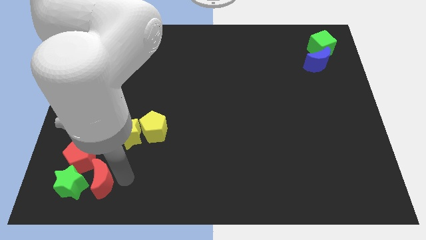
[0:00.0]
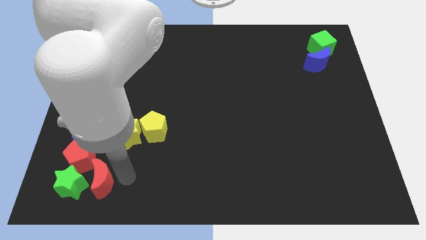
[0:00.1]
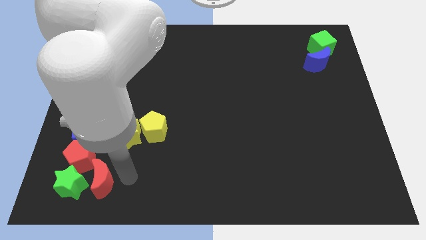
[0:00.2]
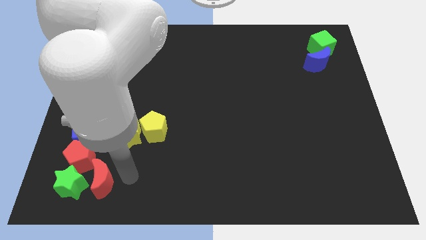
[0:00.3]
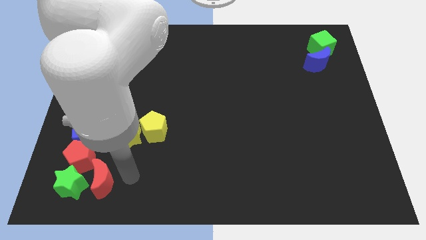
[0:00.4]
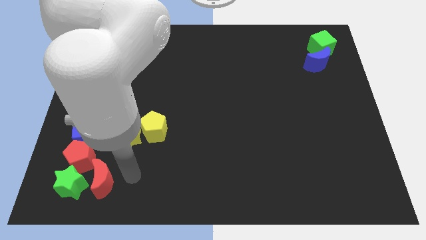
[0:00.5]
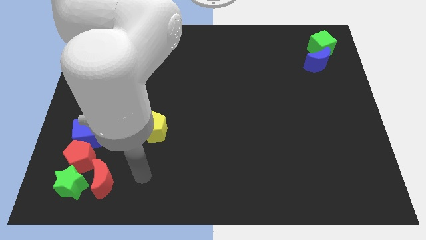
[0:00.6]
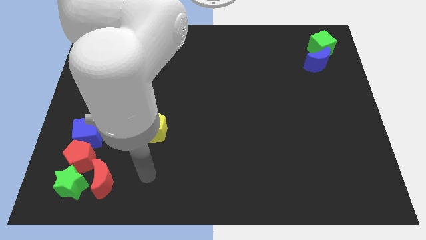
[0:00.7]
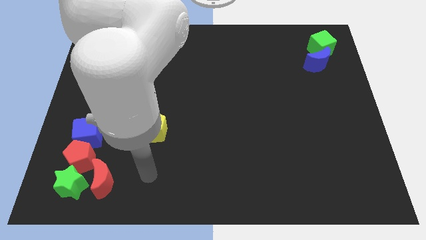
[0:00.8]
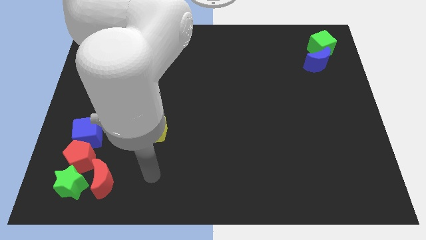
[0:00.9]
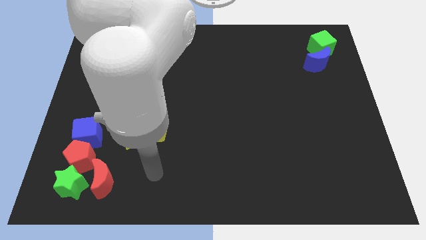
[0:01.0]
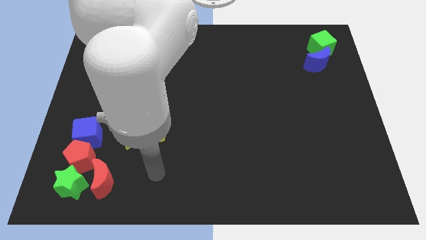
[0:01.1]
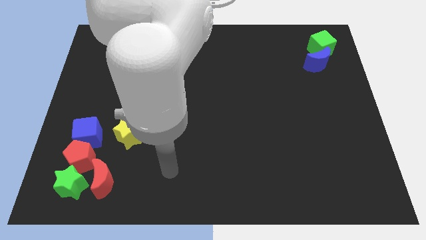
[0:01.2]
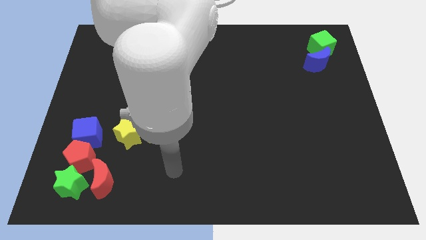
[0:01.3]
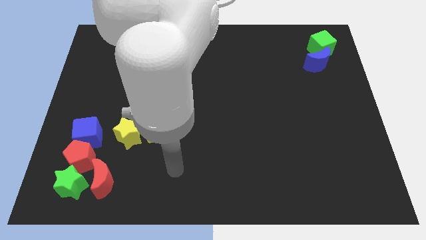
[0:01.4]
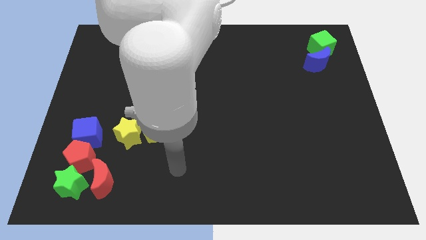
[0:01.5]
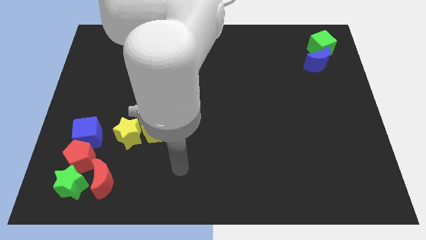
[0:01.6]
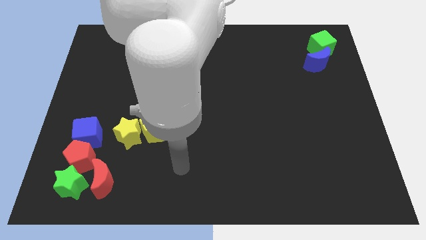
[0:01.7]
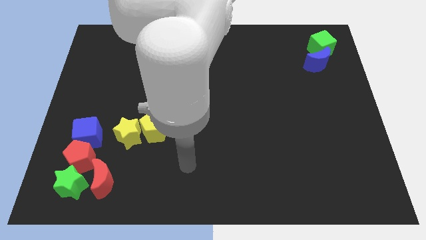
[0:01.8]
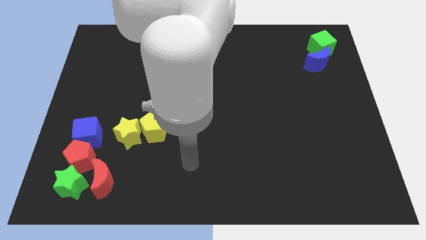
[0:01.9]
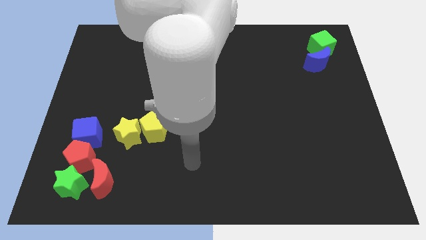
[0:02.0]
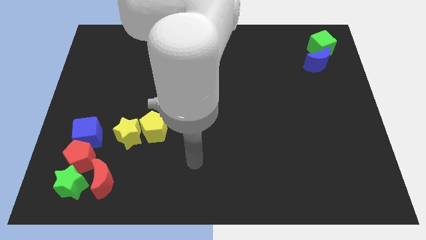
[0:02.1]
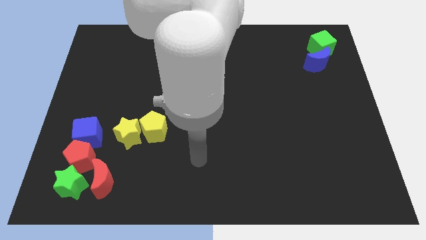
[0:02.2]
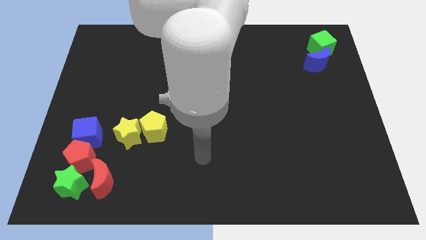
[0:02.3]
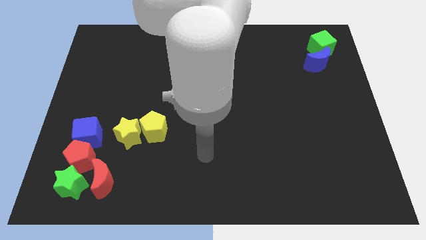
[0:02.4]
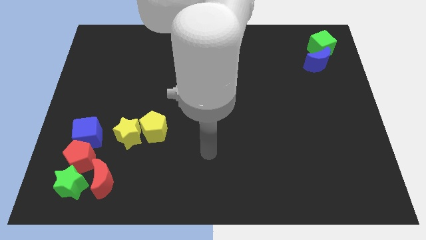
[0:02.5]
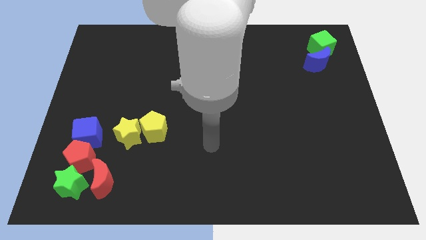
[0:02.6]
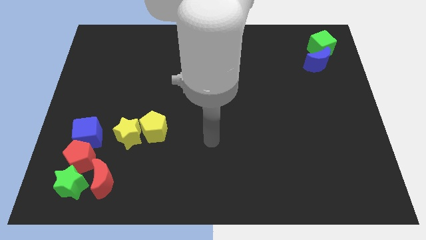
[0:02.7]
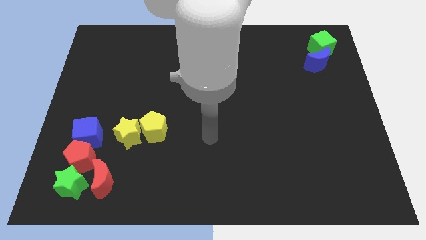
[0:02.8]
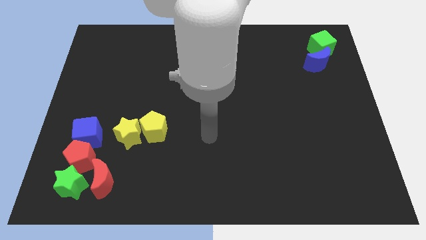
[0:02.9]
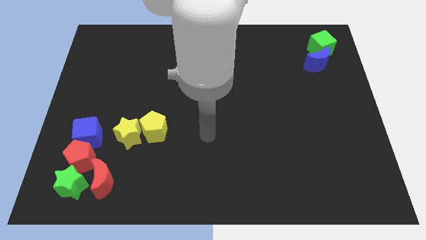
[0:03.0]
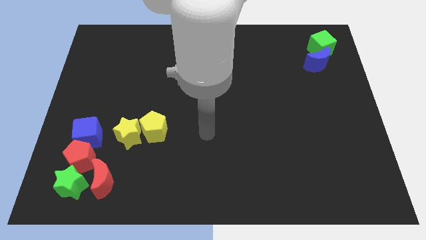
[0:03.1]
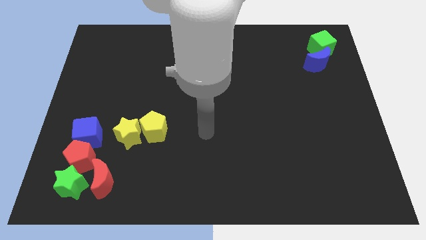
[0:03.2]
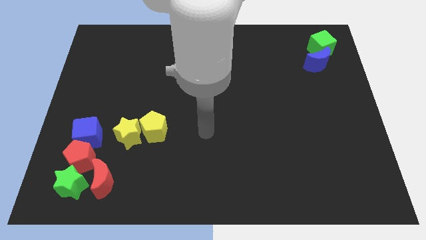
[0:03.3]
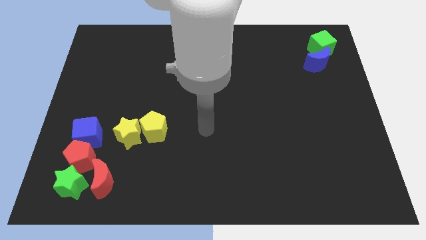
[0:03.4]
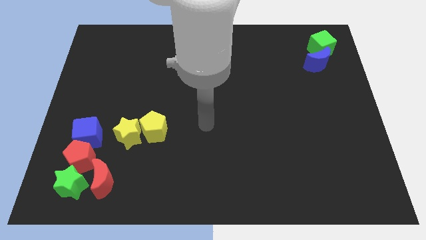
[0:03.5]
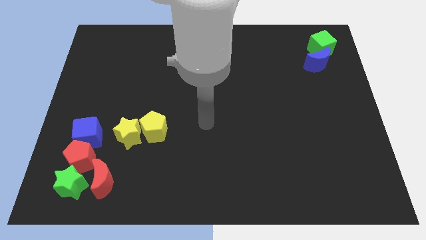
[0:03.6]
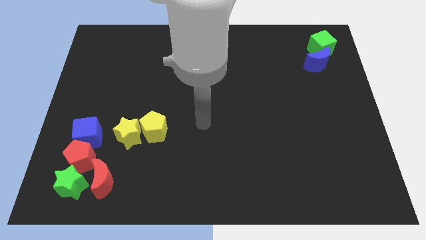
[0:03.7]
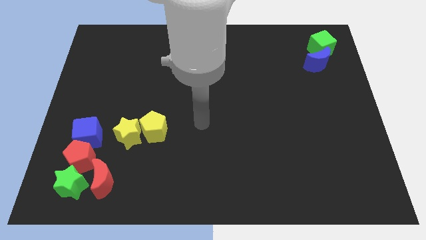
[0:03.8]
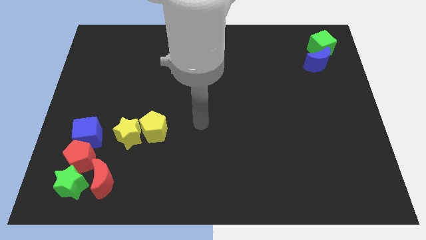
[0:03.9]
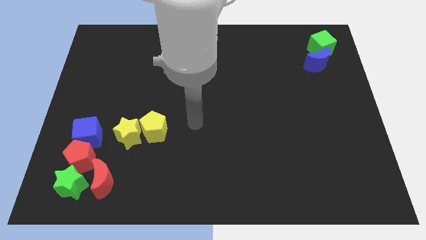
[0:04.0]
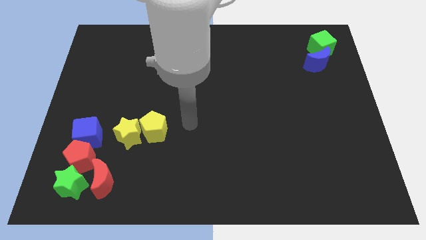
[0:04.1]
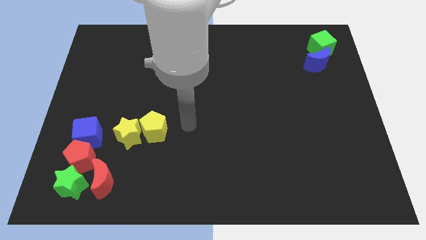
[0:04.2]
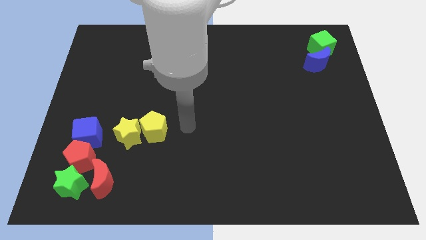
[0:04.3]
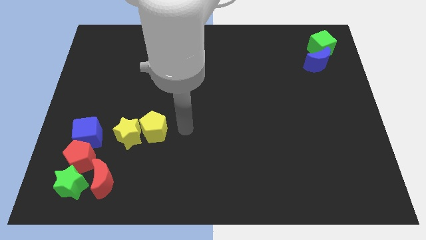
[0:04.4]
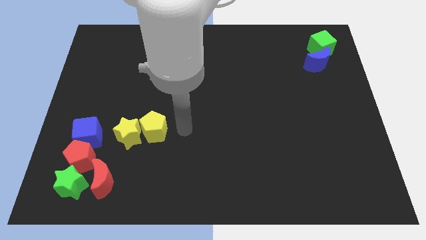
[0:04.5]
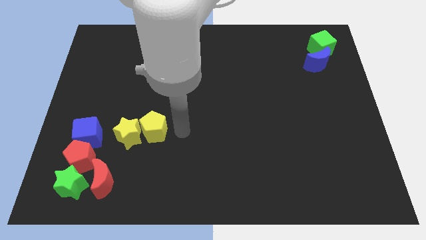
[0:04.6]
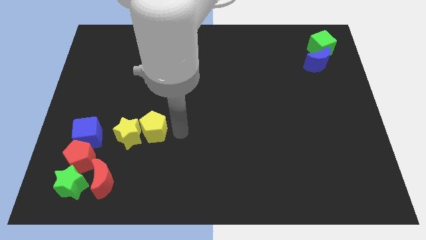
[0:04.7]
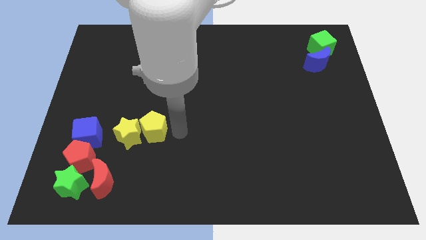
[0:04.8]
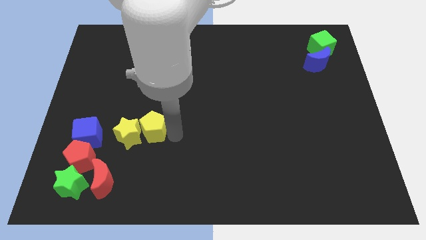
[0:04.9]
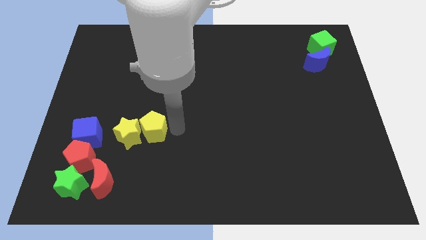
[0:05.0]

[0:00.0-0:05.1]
move your arm to the right of the yellow pentagon

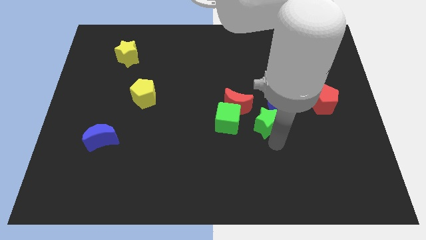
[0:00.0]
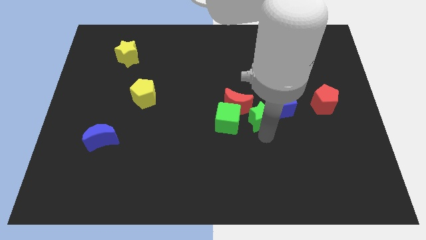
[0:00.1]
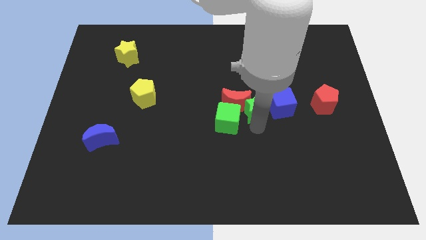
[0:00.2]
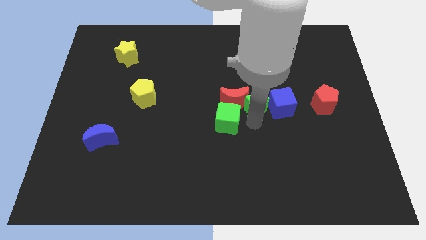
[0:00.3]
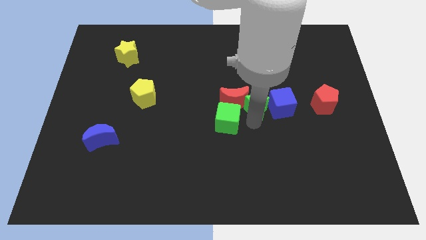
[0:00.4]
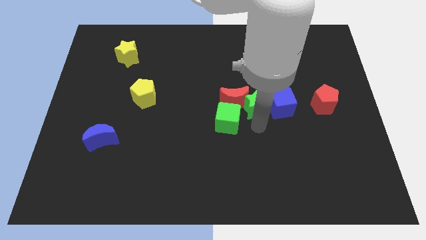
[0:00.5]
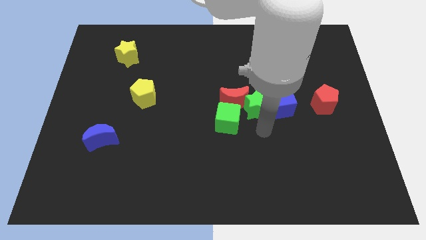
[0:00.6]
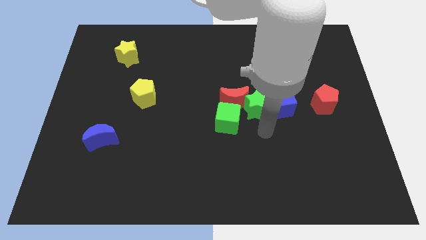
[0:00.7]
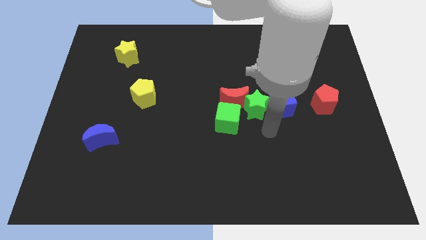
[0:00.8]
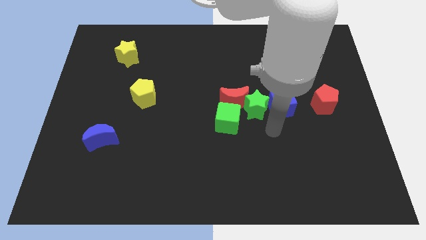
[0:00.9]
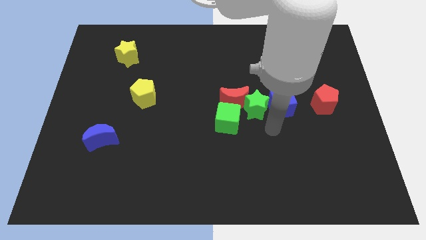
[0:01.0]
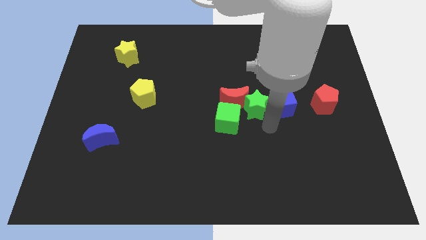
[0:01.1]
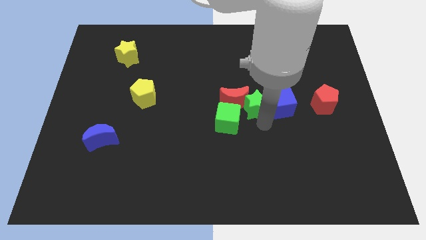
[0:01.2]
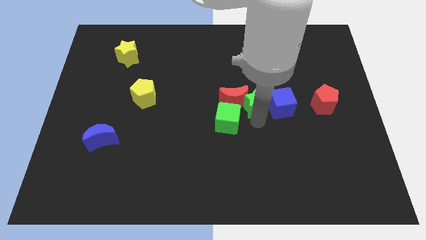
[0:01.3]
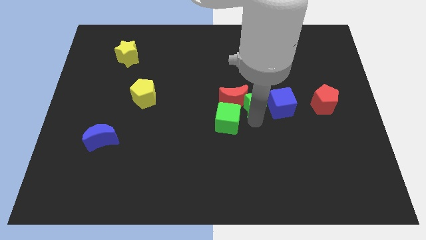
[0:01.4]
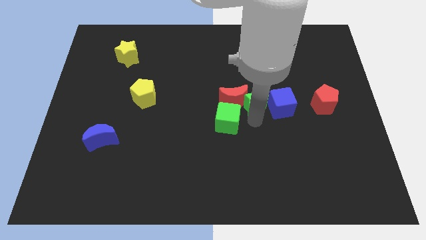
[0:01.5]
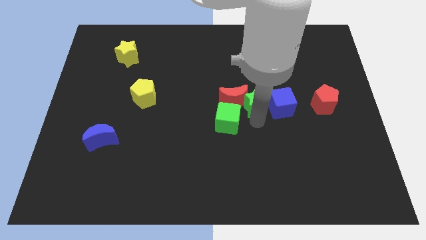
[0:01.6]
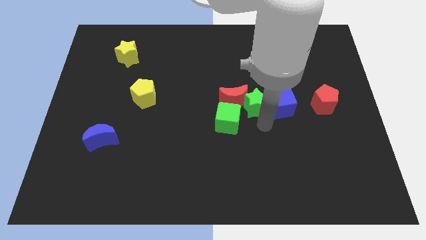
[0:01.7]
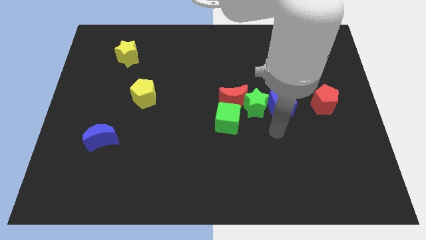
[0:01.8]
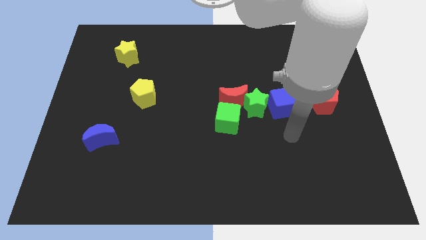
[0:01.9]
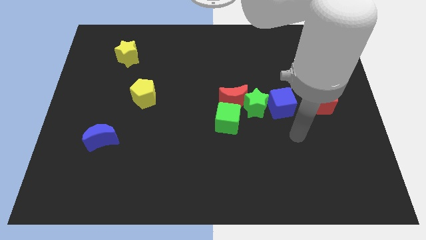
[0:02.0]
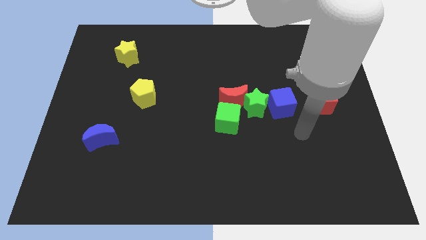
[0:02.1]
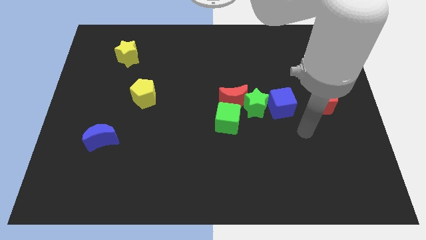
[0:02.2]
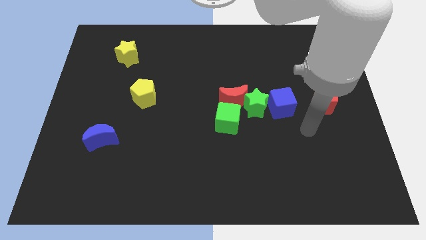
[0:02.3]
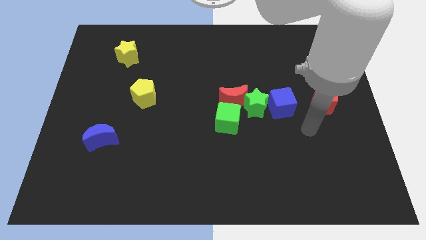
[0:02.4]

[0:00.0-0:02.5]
move the green star to the left side of the blue cube

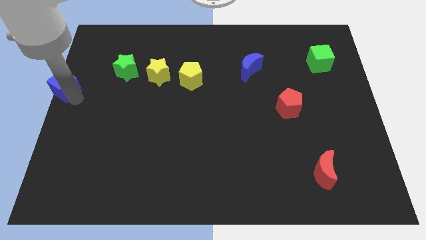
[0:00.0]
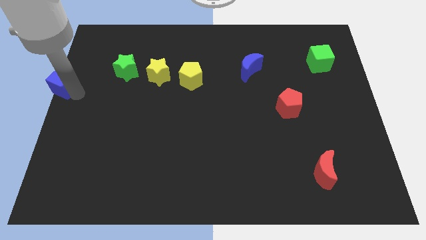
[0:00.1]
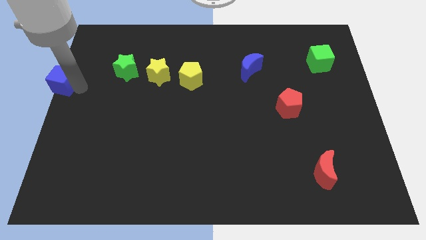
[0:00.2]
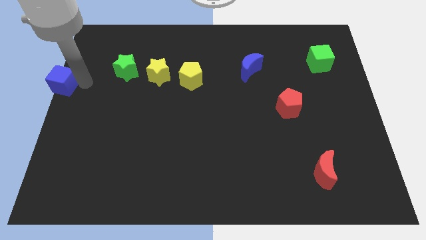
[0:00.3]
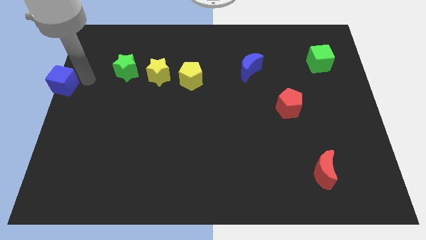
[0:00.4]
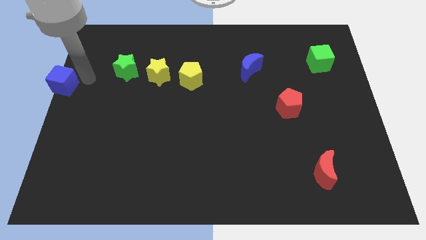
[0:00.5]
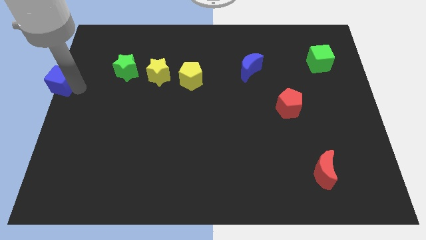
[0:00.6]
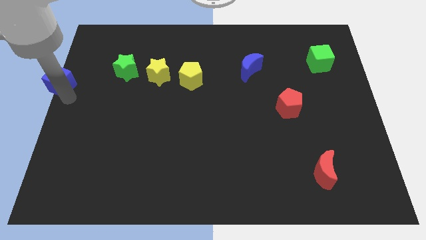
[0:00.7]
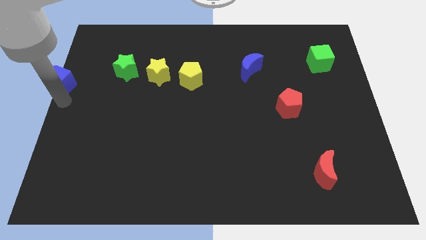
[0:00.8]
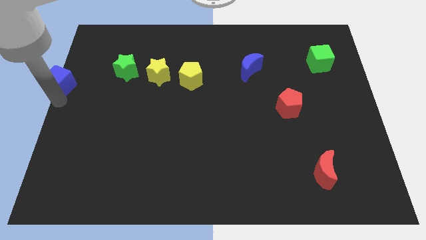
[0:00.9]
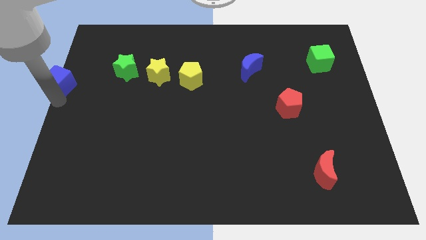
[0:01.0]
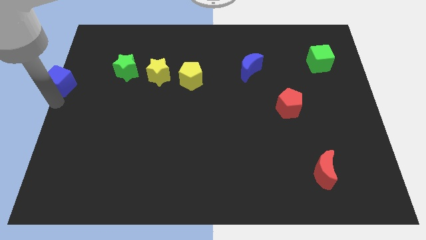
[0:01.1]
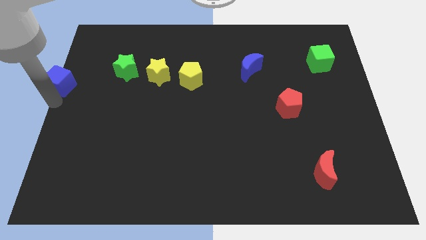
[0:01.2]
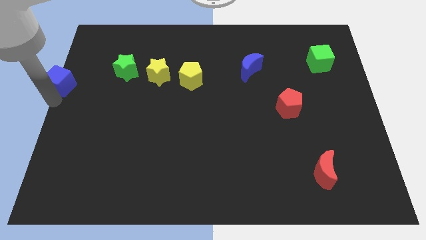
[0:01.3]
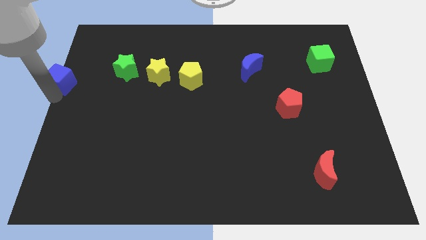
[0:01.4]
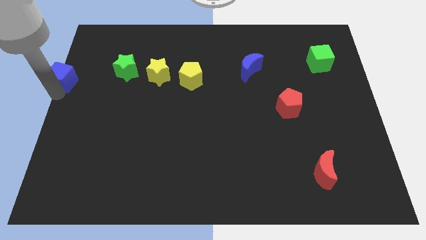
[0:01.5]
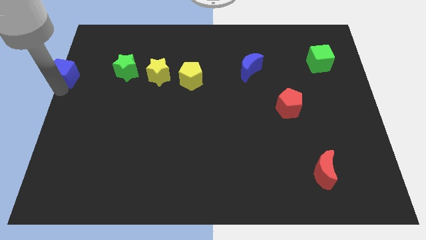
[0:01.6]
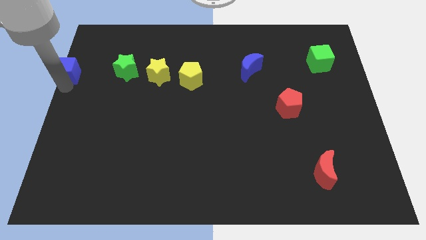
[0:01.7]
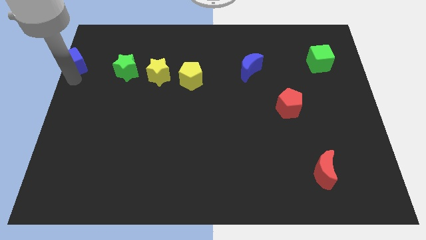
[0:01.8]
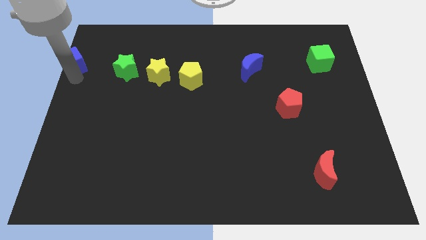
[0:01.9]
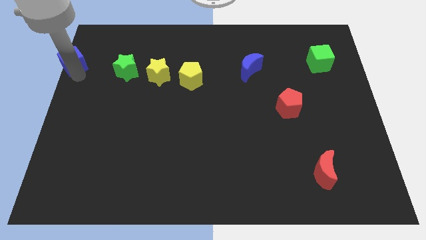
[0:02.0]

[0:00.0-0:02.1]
slide blue cube parallel to green star
